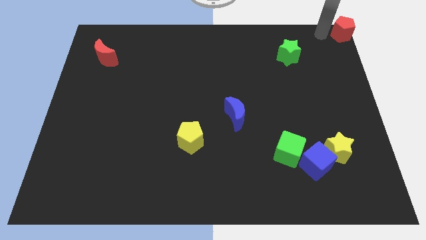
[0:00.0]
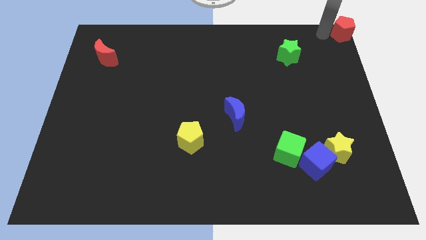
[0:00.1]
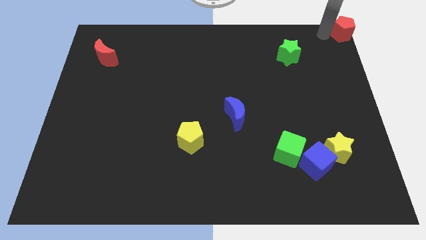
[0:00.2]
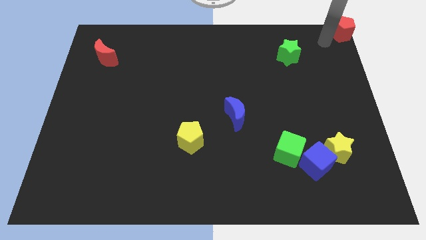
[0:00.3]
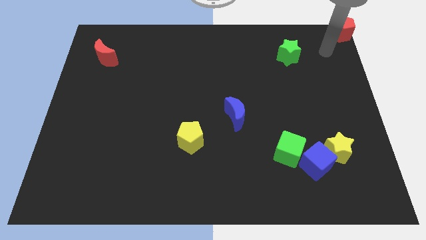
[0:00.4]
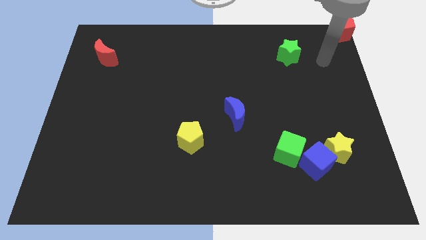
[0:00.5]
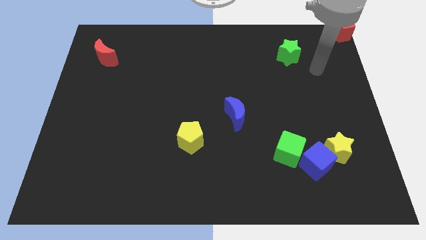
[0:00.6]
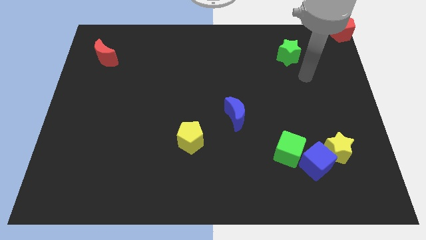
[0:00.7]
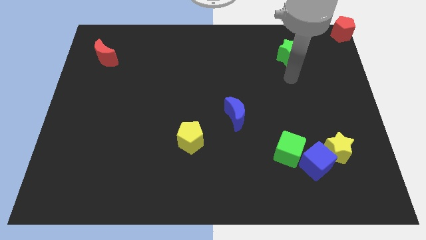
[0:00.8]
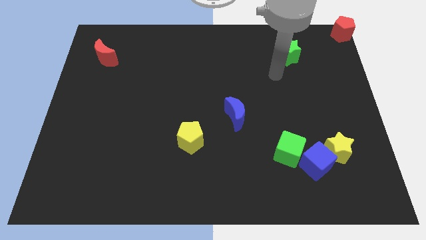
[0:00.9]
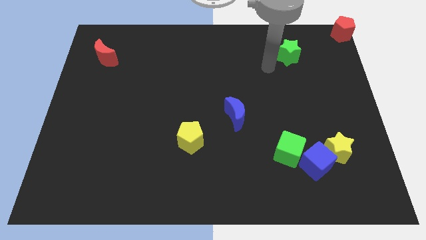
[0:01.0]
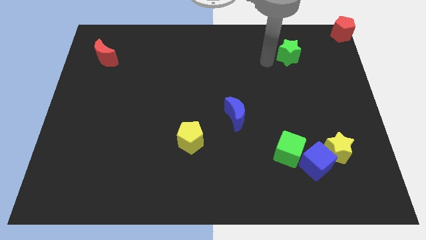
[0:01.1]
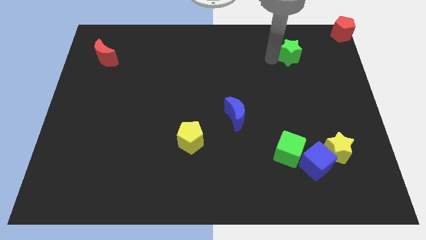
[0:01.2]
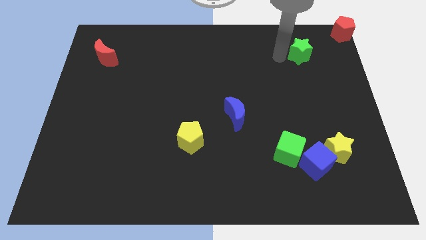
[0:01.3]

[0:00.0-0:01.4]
move your arm to the left of the green star

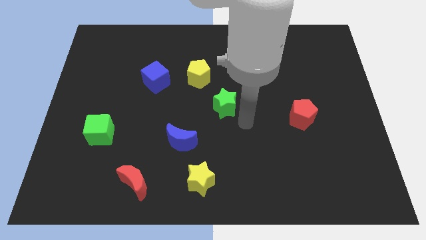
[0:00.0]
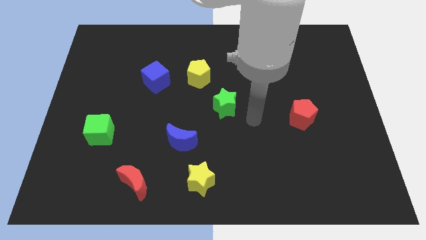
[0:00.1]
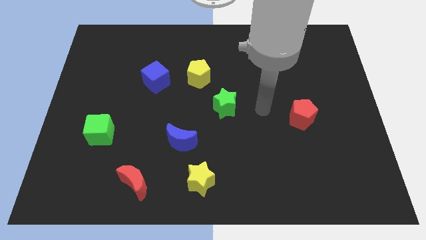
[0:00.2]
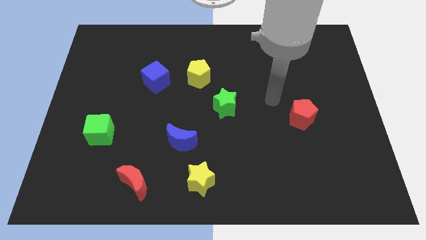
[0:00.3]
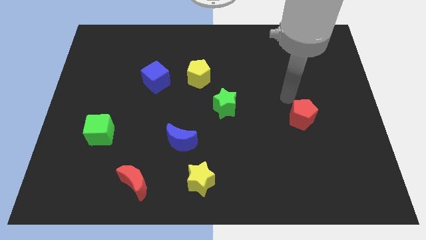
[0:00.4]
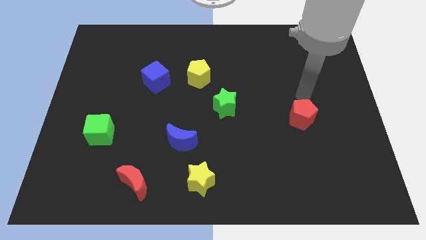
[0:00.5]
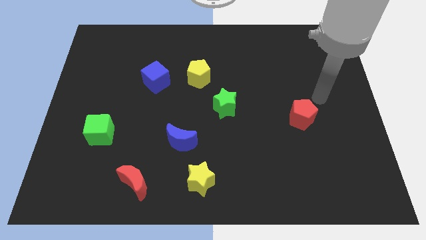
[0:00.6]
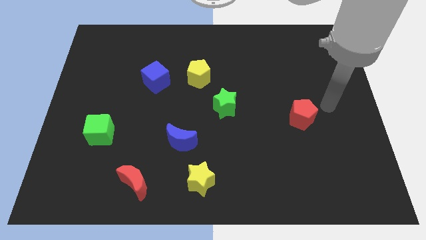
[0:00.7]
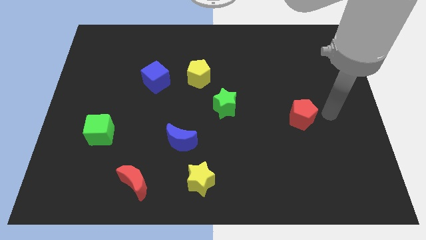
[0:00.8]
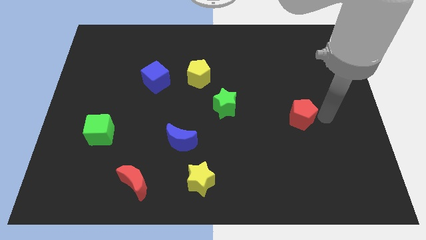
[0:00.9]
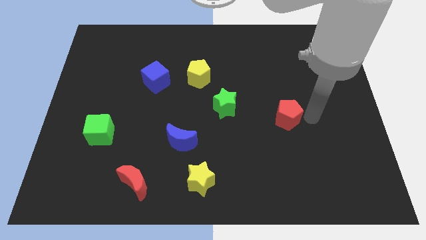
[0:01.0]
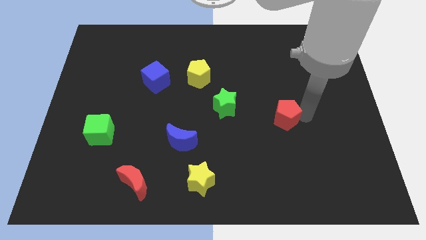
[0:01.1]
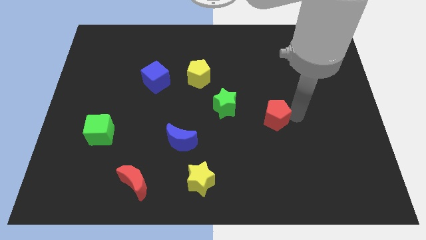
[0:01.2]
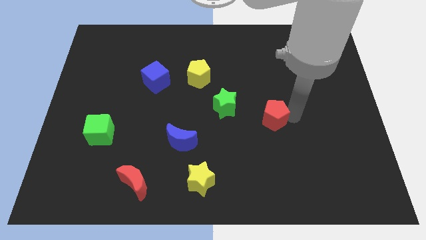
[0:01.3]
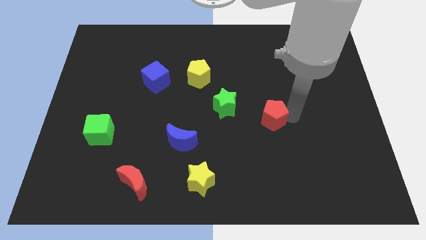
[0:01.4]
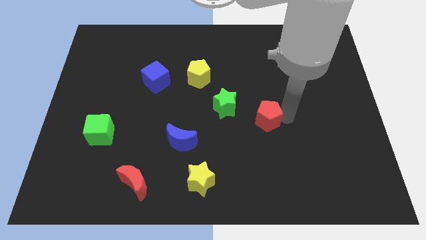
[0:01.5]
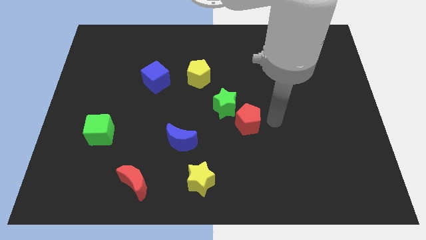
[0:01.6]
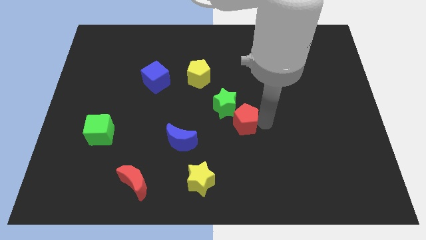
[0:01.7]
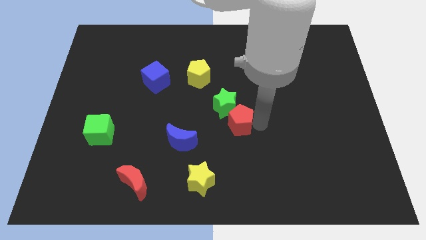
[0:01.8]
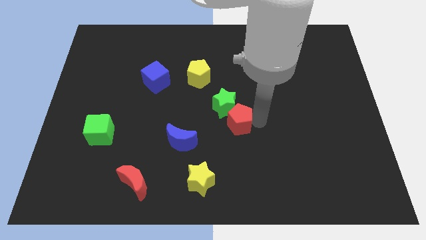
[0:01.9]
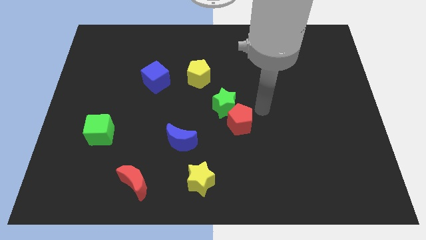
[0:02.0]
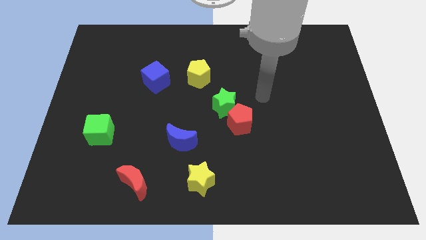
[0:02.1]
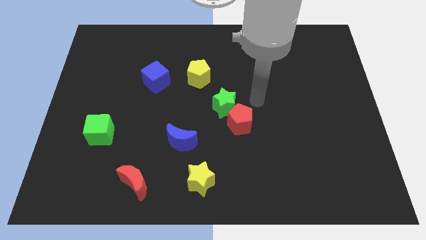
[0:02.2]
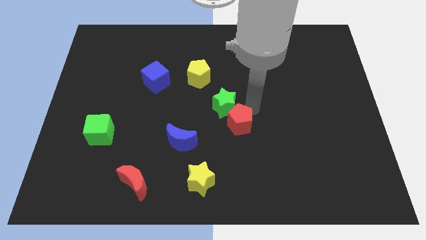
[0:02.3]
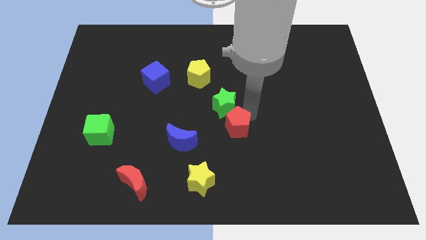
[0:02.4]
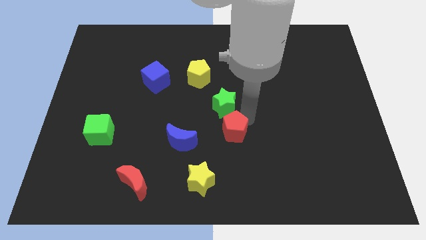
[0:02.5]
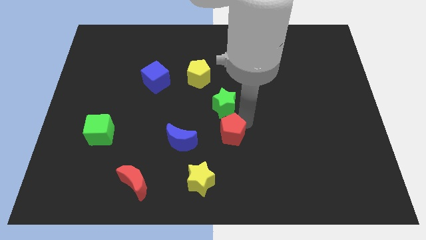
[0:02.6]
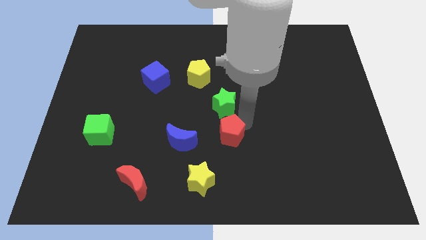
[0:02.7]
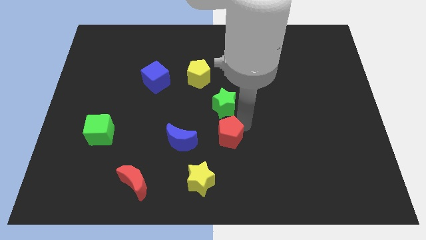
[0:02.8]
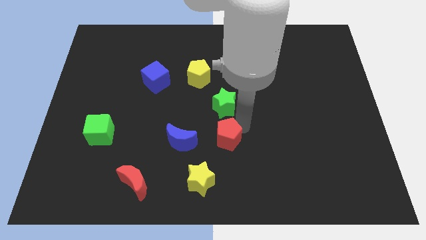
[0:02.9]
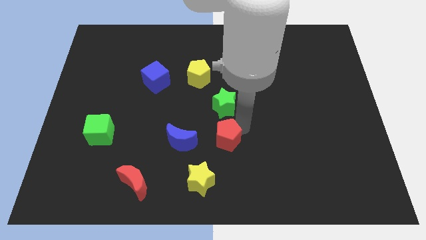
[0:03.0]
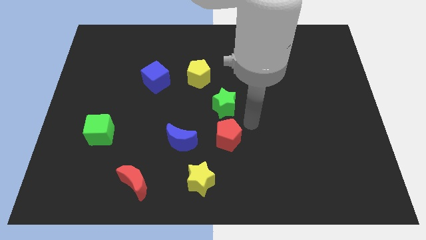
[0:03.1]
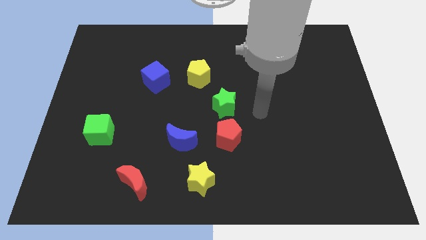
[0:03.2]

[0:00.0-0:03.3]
push the red pentagon to the right of the blue crescent

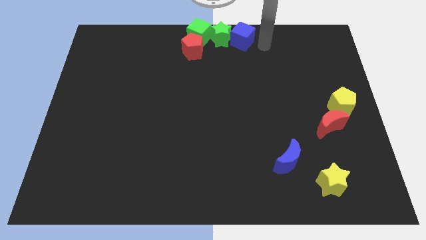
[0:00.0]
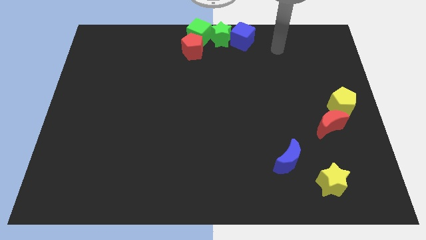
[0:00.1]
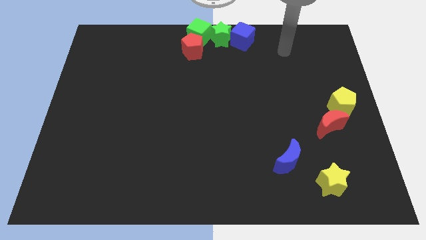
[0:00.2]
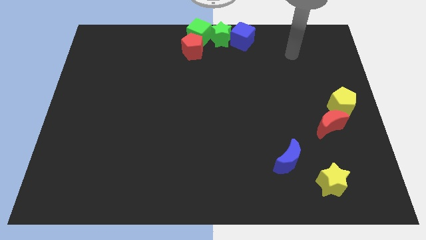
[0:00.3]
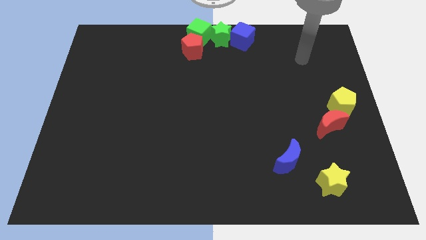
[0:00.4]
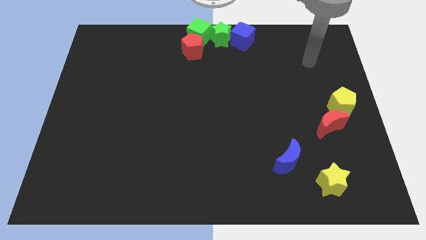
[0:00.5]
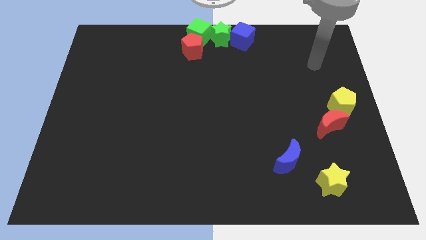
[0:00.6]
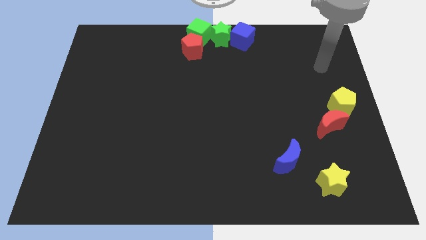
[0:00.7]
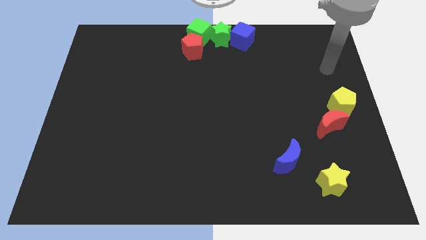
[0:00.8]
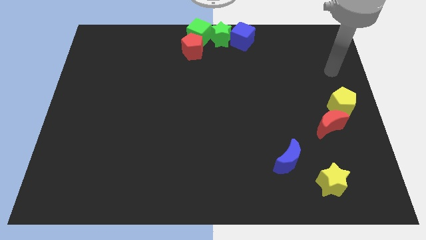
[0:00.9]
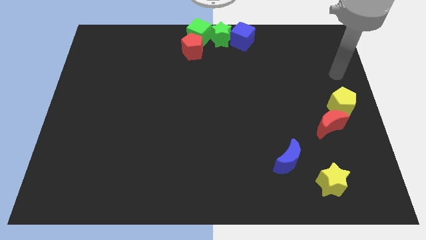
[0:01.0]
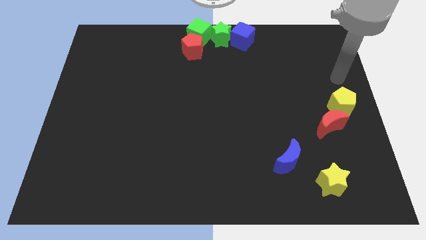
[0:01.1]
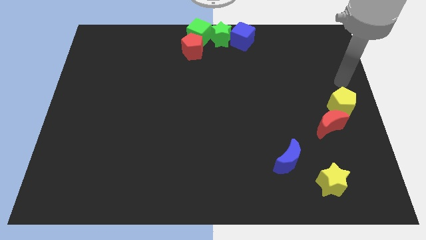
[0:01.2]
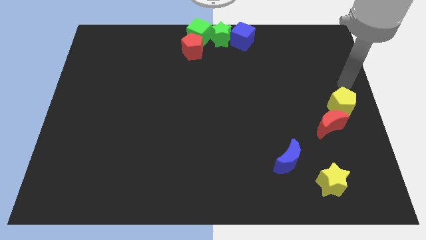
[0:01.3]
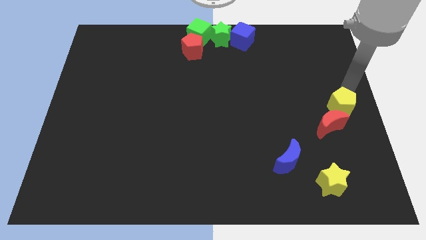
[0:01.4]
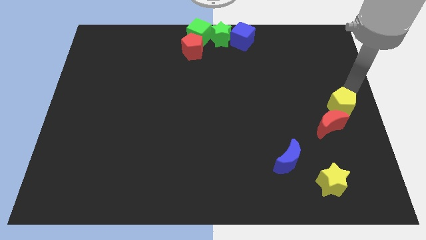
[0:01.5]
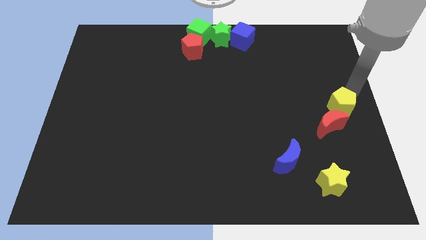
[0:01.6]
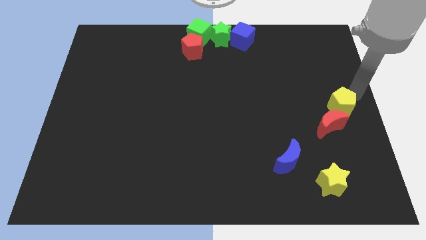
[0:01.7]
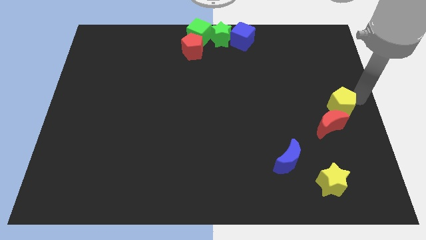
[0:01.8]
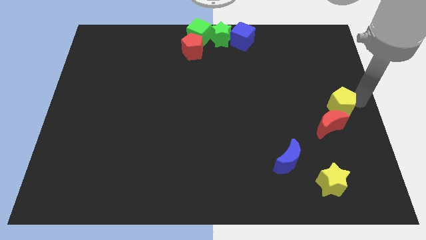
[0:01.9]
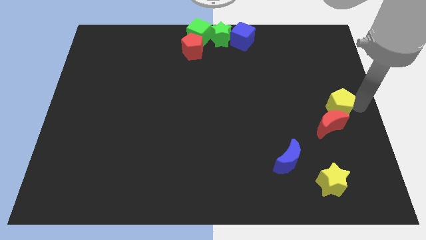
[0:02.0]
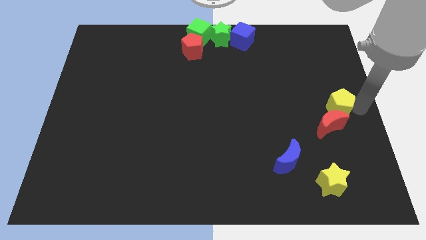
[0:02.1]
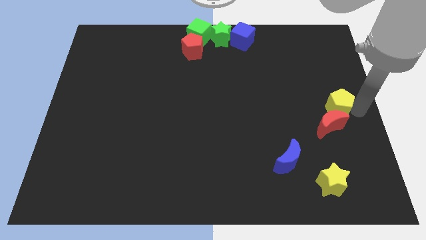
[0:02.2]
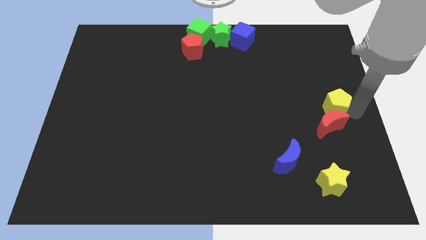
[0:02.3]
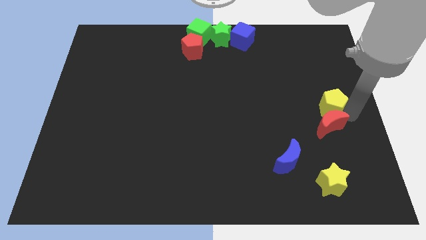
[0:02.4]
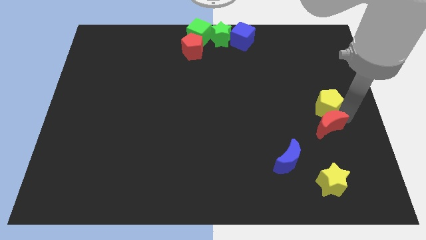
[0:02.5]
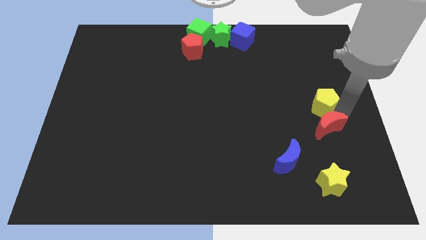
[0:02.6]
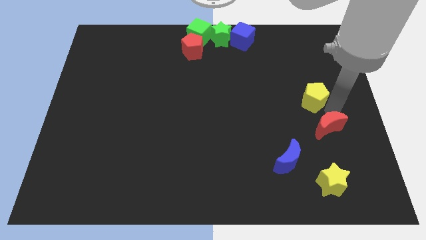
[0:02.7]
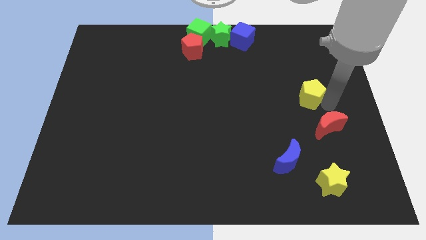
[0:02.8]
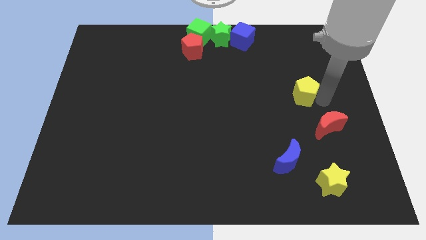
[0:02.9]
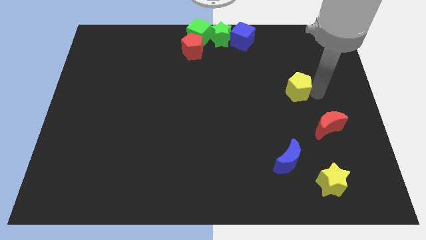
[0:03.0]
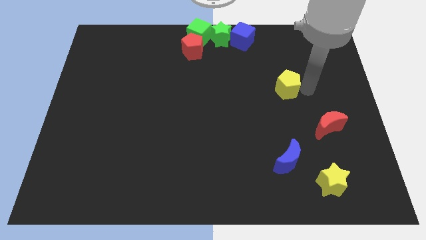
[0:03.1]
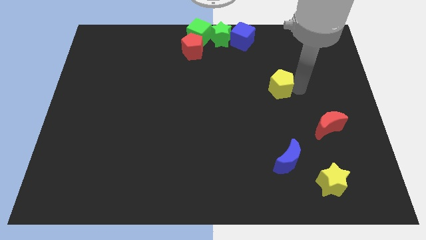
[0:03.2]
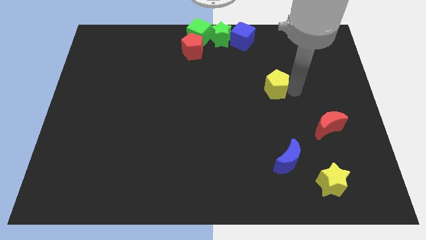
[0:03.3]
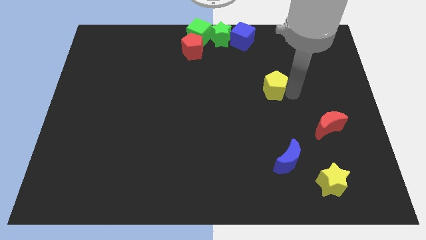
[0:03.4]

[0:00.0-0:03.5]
separate the yellow pentagon from the red crescent

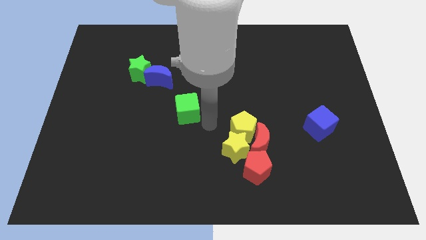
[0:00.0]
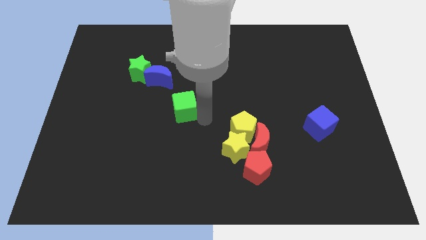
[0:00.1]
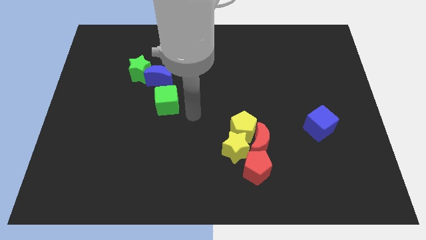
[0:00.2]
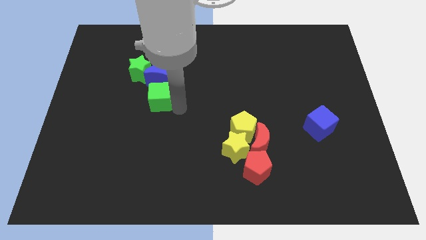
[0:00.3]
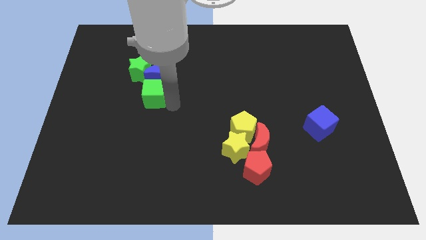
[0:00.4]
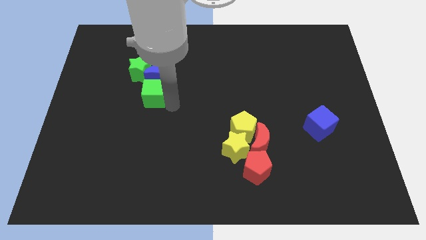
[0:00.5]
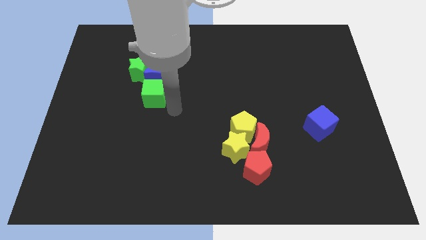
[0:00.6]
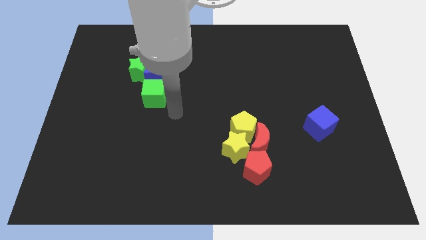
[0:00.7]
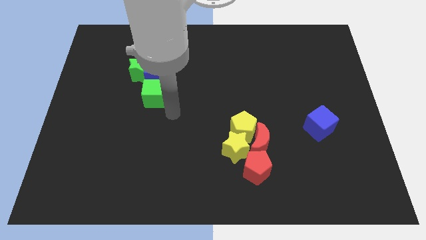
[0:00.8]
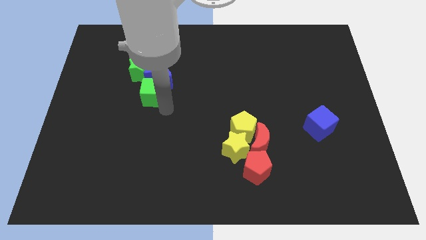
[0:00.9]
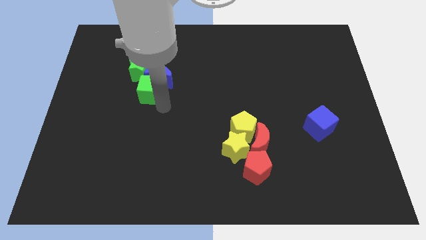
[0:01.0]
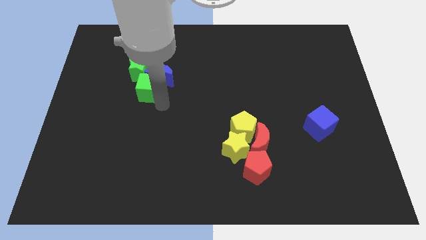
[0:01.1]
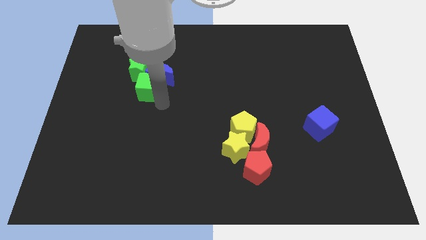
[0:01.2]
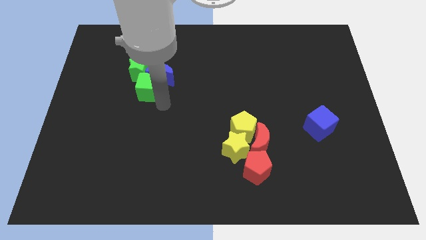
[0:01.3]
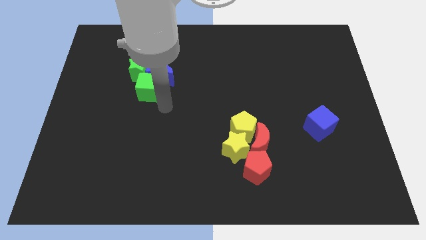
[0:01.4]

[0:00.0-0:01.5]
move green cube into blue moon
